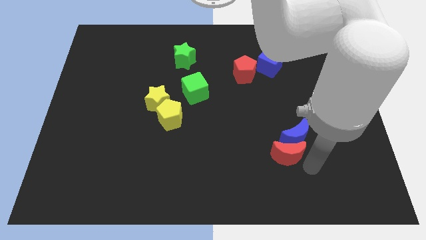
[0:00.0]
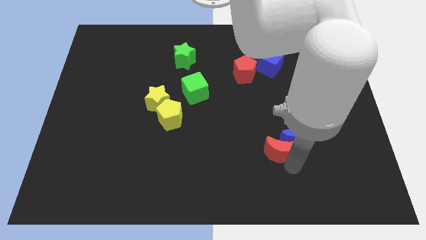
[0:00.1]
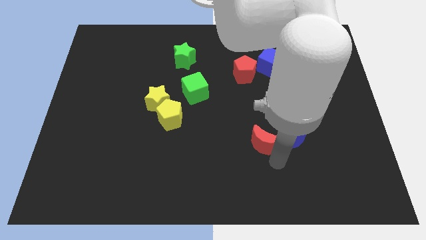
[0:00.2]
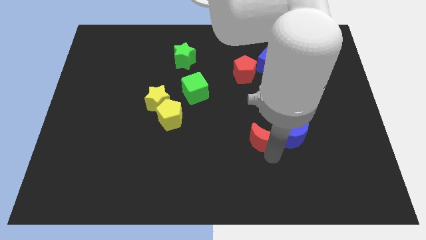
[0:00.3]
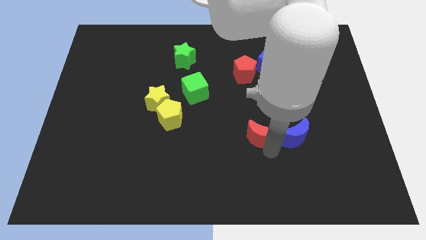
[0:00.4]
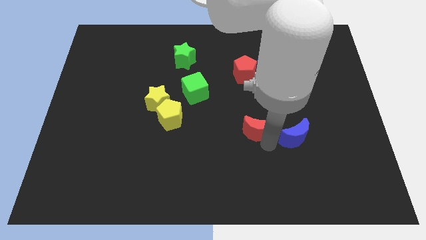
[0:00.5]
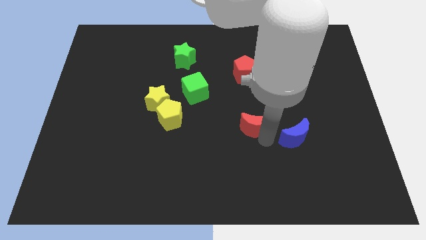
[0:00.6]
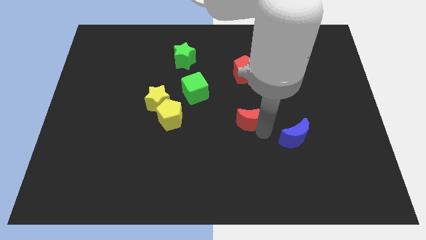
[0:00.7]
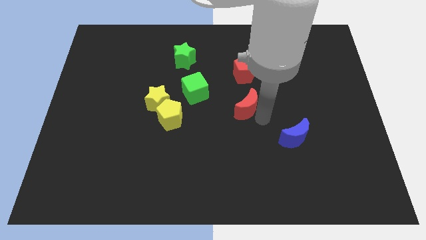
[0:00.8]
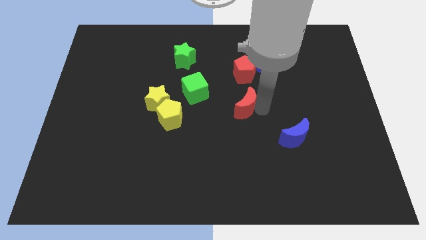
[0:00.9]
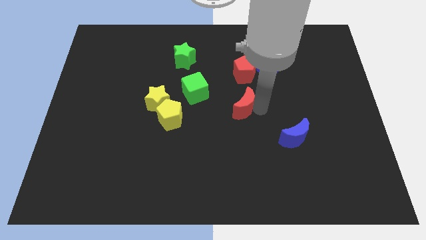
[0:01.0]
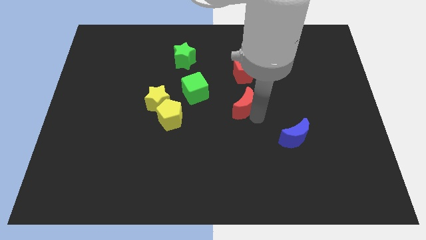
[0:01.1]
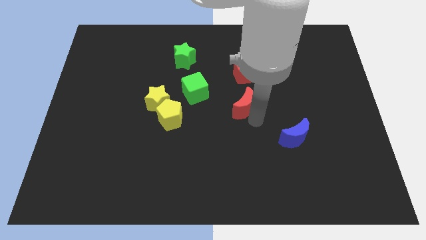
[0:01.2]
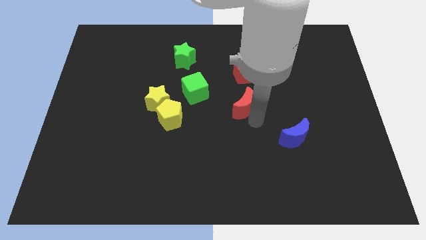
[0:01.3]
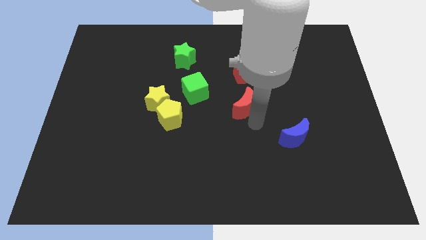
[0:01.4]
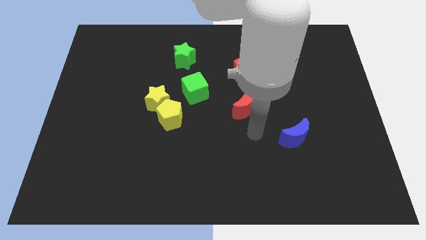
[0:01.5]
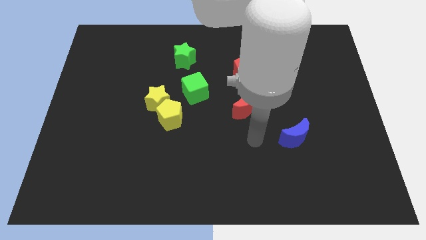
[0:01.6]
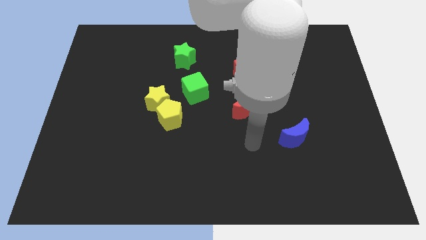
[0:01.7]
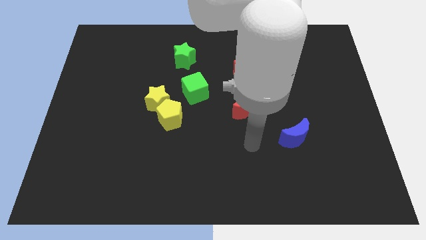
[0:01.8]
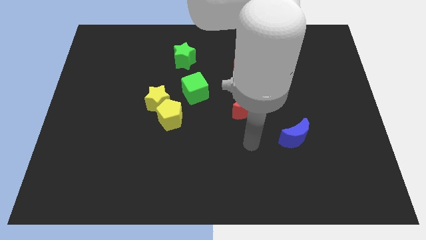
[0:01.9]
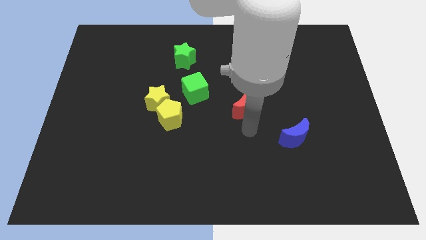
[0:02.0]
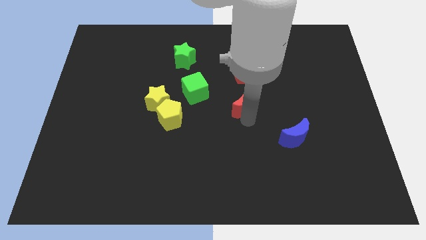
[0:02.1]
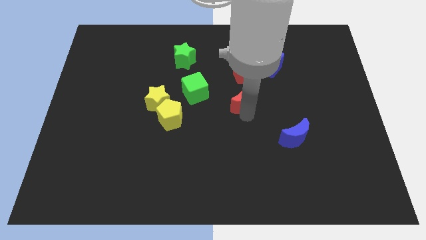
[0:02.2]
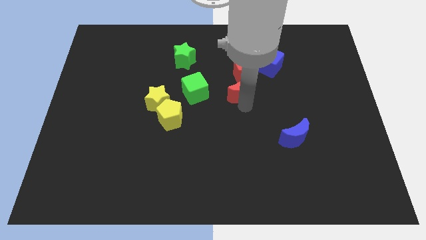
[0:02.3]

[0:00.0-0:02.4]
move the red crescent to the bottom of the red pentagon

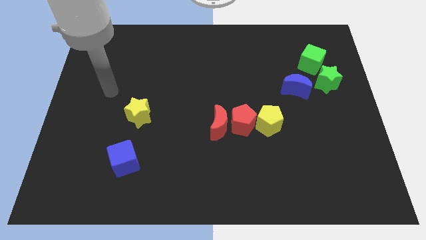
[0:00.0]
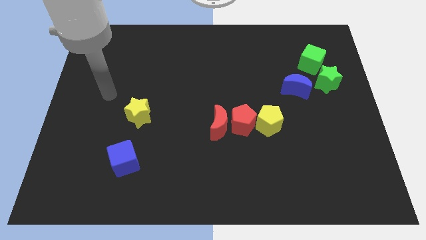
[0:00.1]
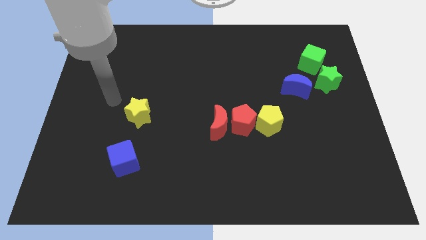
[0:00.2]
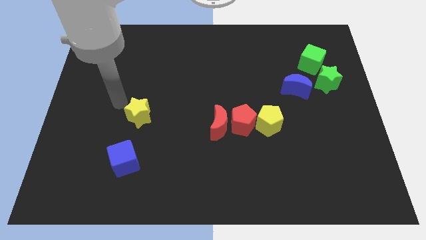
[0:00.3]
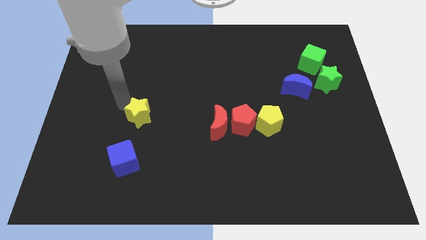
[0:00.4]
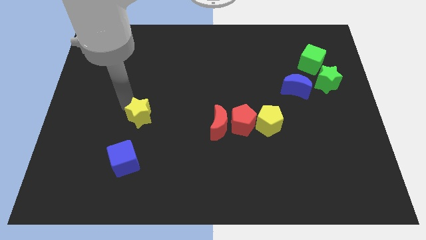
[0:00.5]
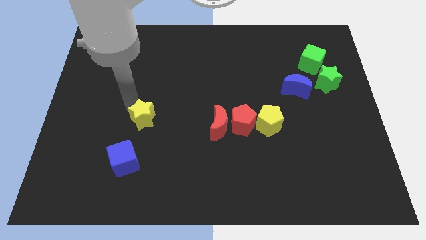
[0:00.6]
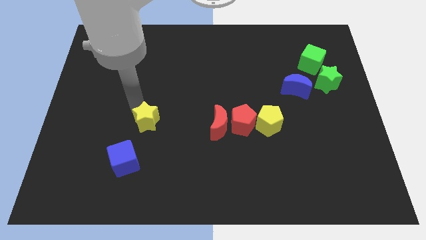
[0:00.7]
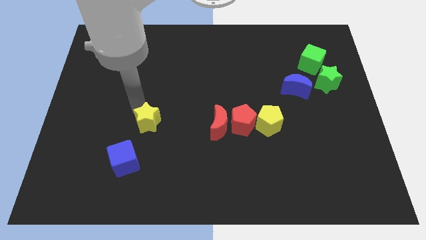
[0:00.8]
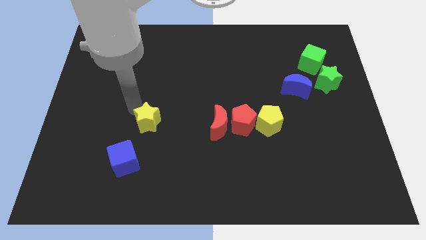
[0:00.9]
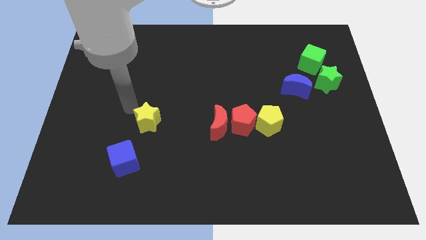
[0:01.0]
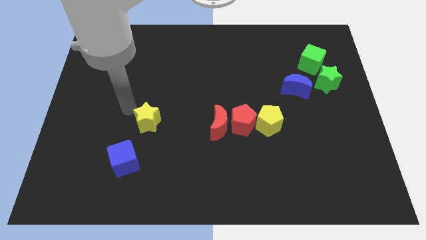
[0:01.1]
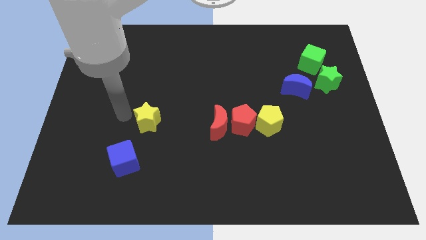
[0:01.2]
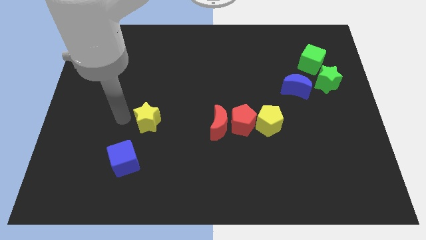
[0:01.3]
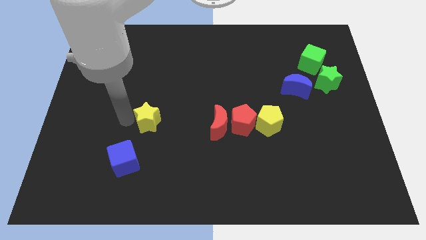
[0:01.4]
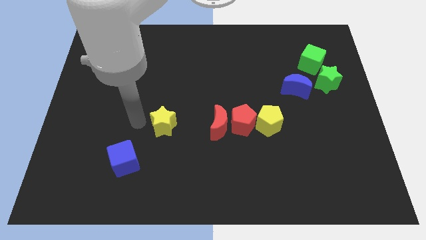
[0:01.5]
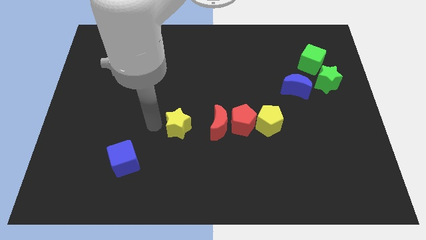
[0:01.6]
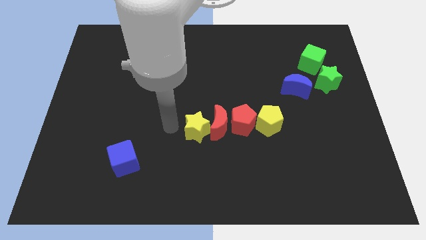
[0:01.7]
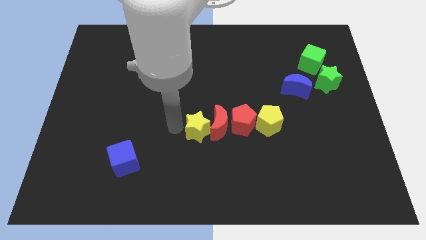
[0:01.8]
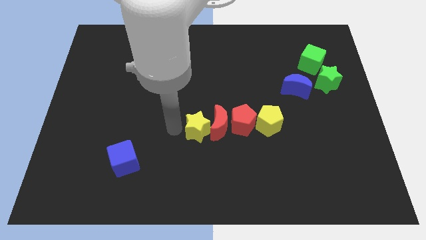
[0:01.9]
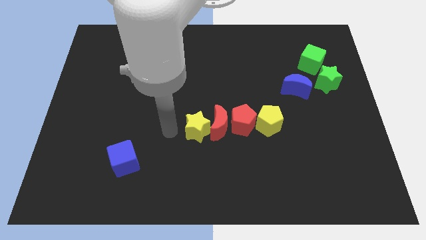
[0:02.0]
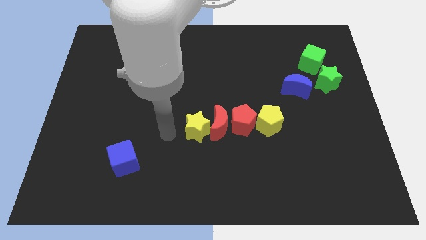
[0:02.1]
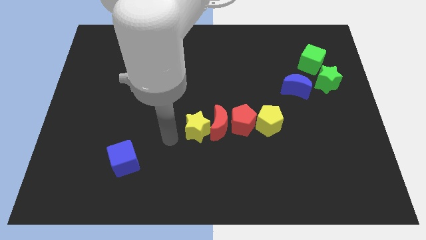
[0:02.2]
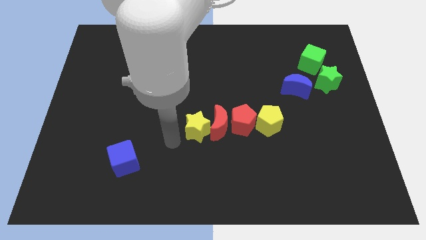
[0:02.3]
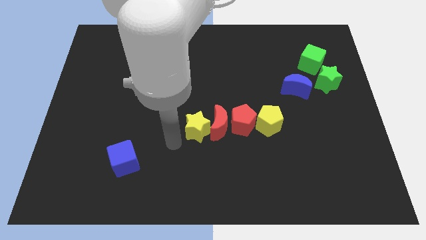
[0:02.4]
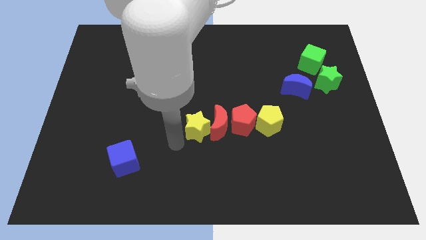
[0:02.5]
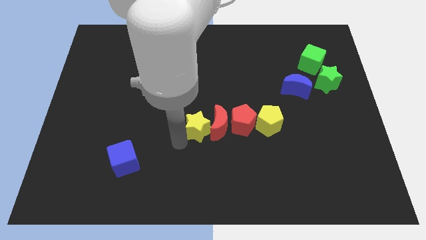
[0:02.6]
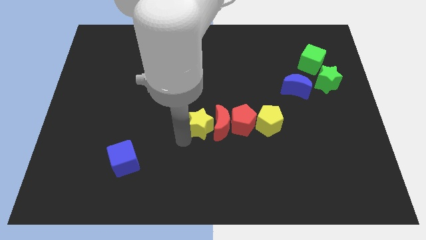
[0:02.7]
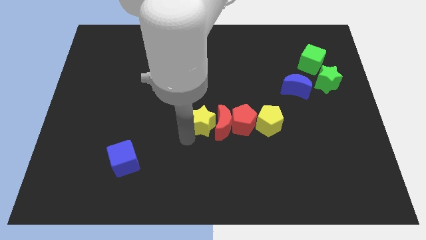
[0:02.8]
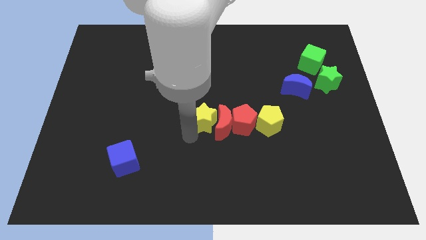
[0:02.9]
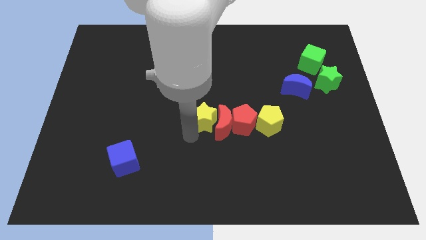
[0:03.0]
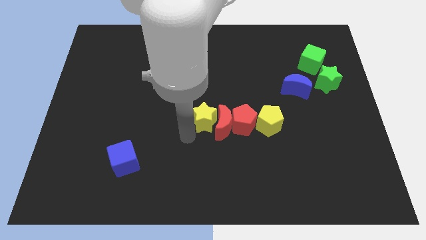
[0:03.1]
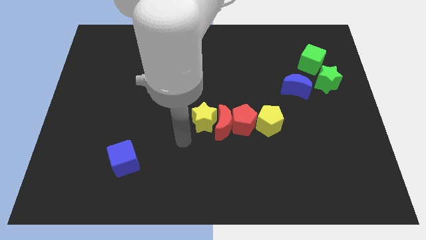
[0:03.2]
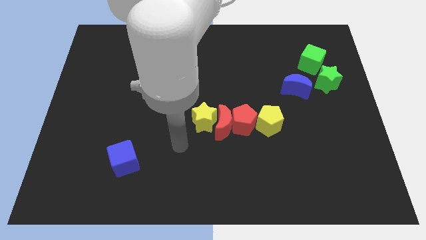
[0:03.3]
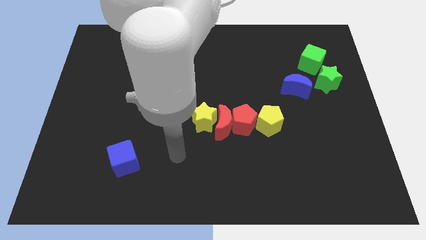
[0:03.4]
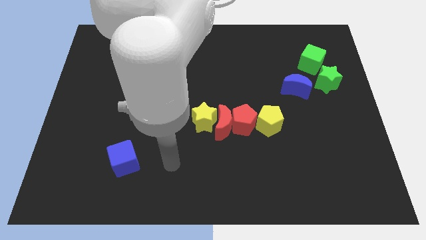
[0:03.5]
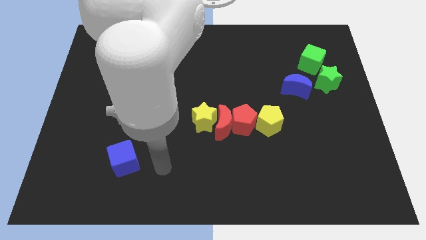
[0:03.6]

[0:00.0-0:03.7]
put the yellow star to the left side of the red moon

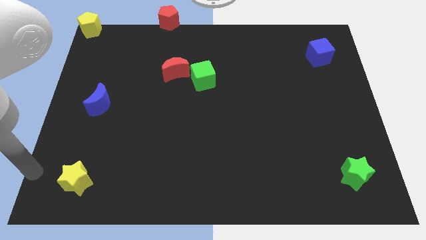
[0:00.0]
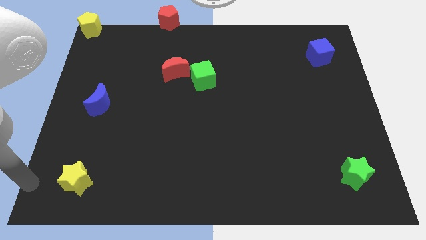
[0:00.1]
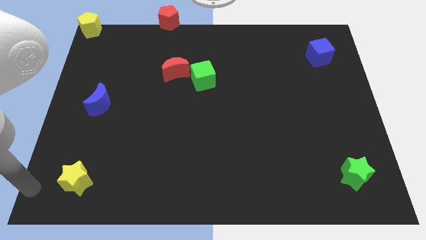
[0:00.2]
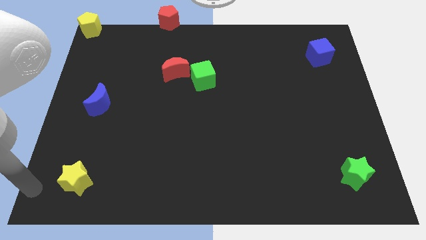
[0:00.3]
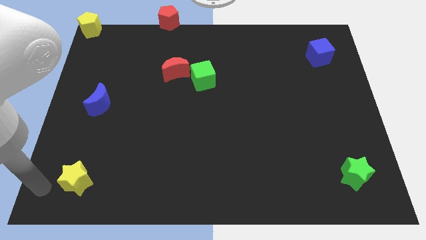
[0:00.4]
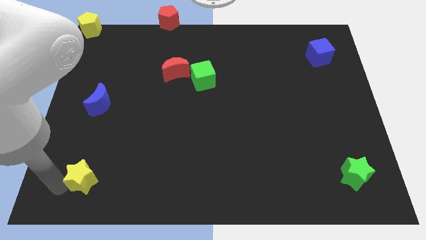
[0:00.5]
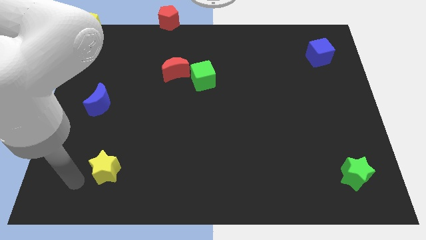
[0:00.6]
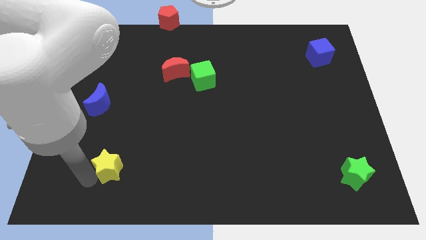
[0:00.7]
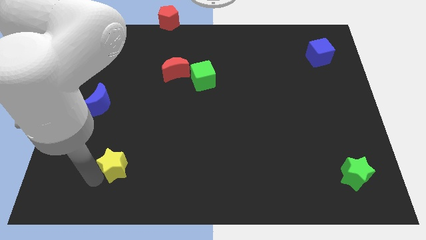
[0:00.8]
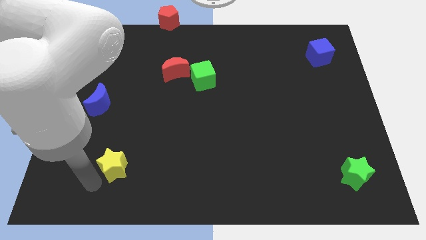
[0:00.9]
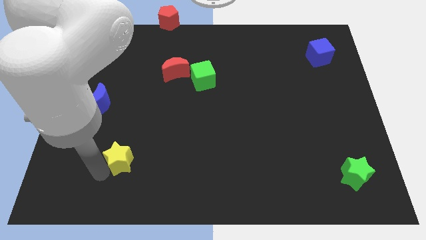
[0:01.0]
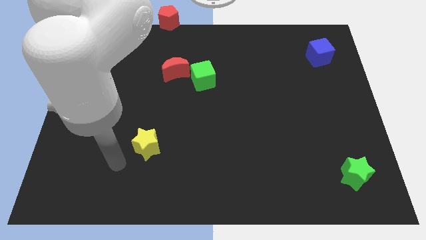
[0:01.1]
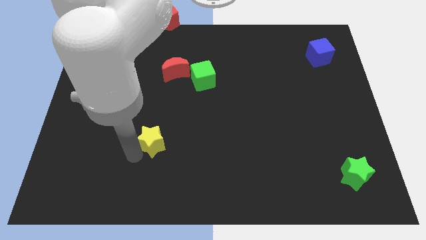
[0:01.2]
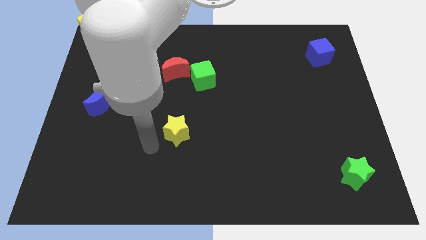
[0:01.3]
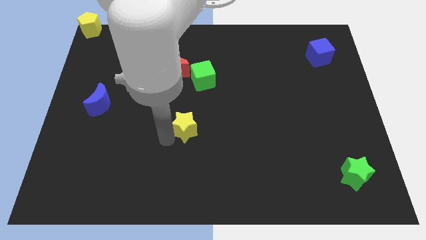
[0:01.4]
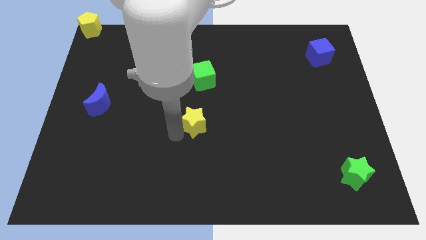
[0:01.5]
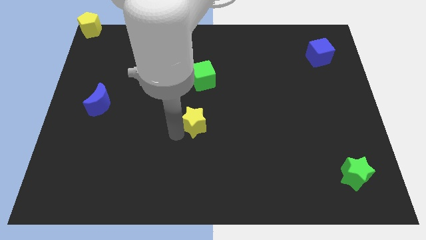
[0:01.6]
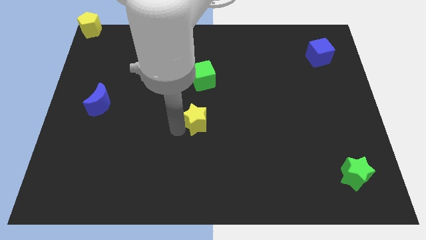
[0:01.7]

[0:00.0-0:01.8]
slide yellow star to the center of the board

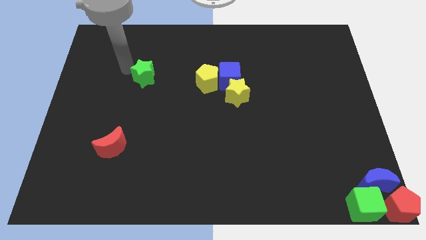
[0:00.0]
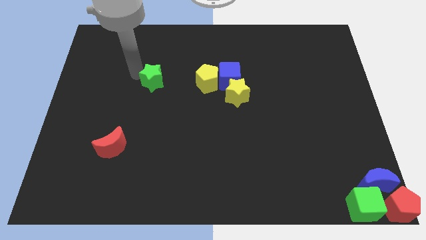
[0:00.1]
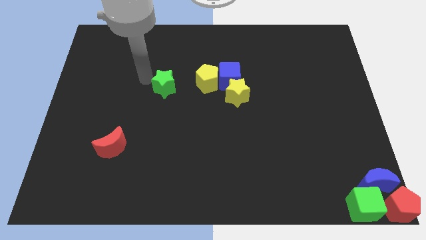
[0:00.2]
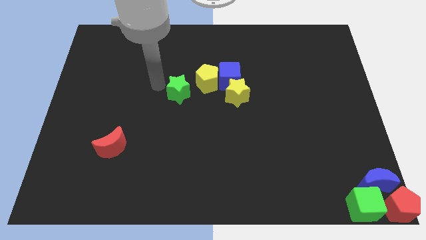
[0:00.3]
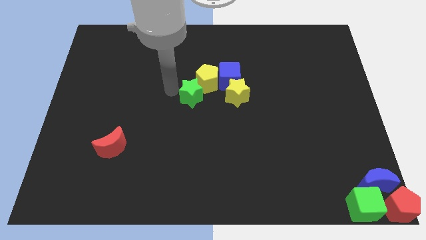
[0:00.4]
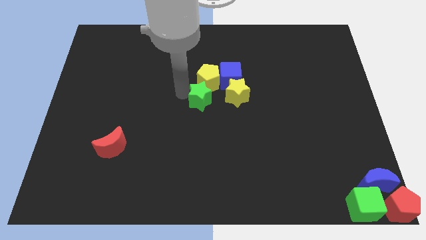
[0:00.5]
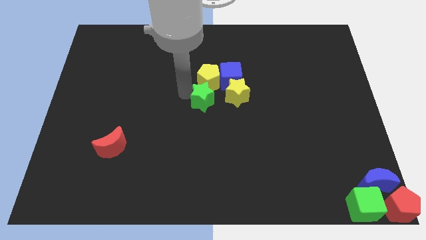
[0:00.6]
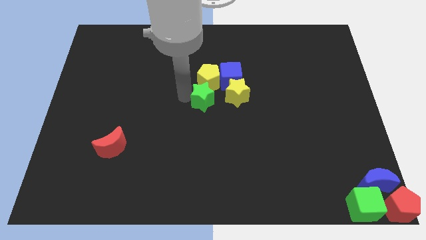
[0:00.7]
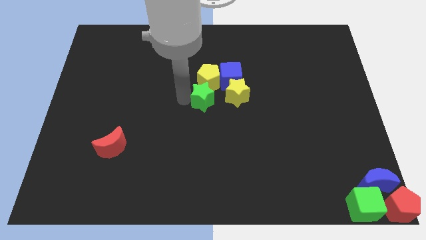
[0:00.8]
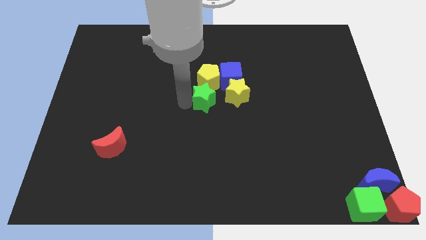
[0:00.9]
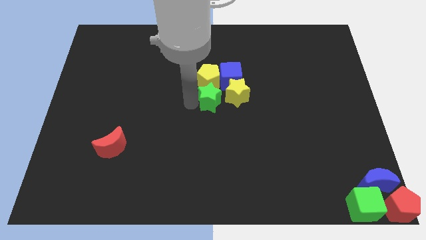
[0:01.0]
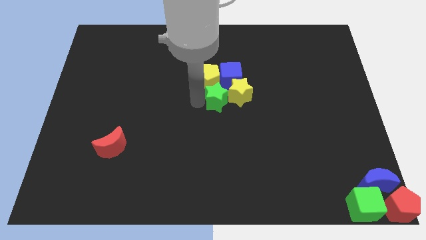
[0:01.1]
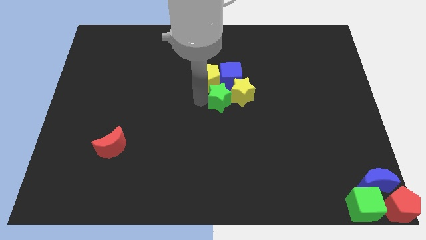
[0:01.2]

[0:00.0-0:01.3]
place the green star below the yellow pentagon
